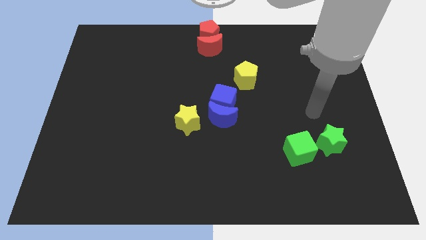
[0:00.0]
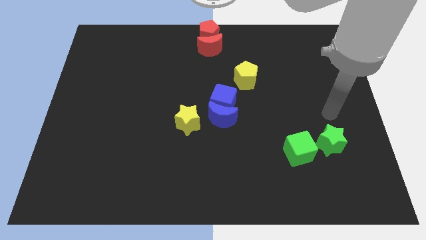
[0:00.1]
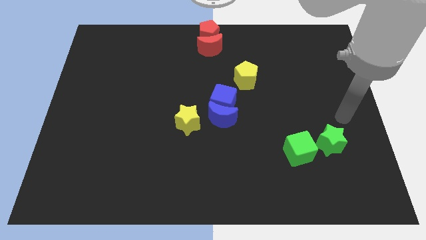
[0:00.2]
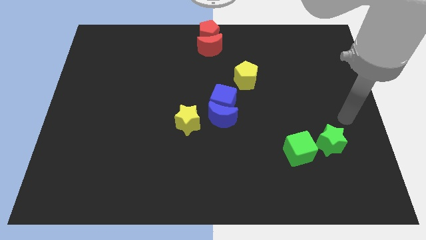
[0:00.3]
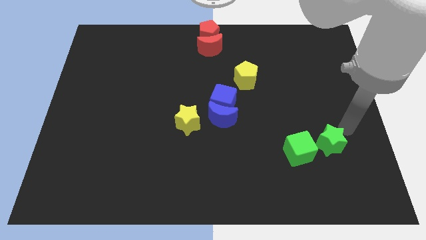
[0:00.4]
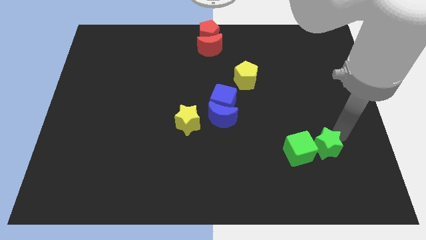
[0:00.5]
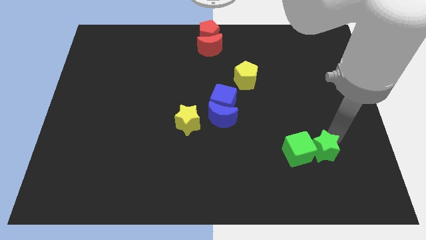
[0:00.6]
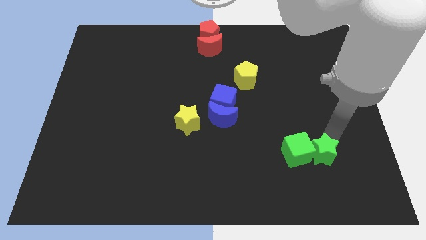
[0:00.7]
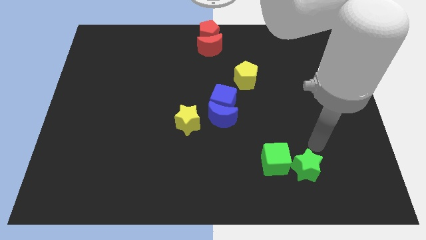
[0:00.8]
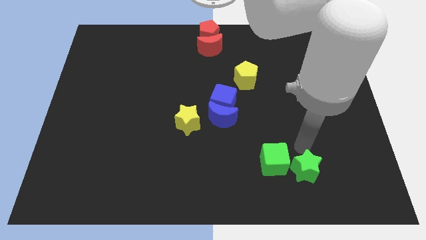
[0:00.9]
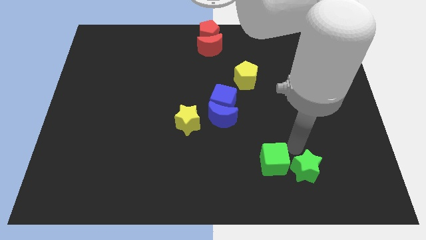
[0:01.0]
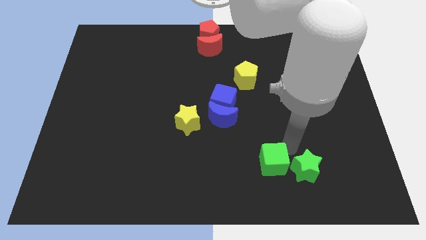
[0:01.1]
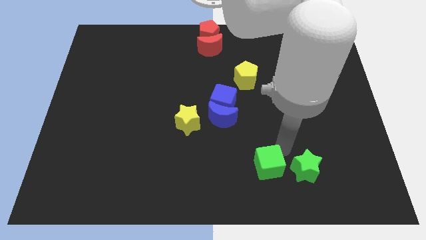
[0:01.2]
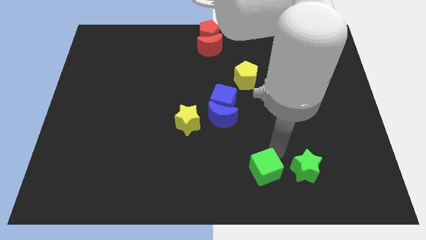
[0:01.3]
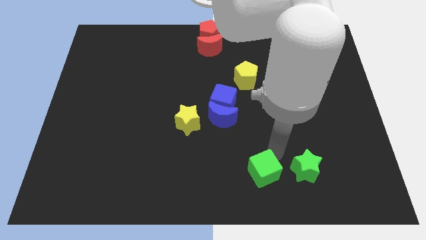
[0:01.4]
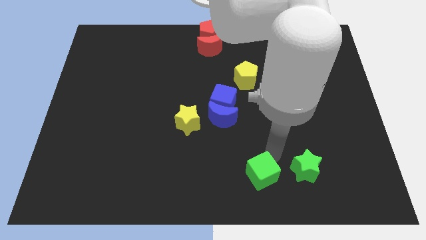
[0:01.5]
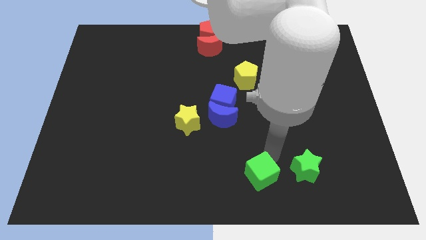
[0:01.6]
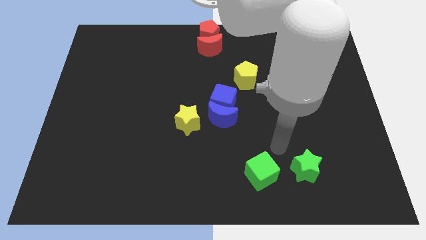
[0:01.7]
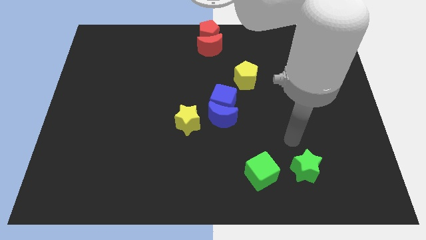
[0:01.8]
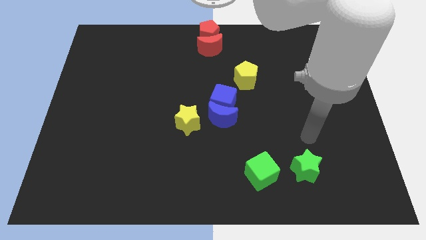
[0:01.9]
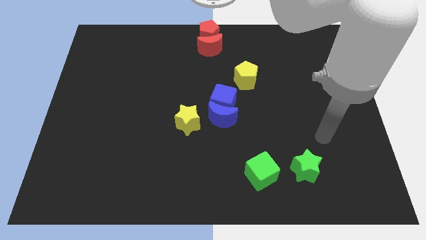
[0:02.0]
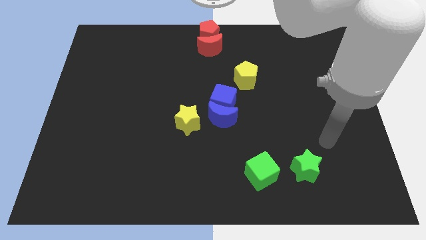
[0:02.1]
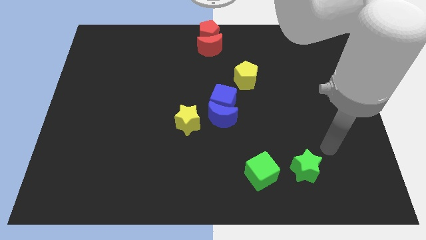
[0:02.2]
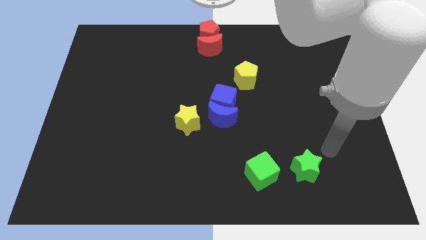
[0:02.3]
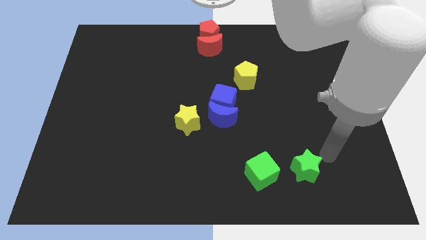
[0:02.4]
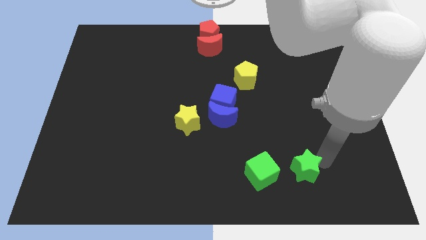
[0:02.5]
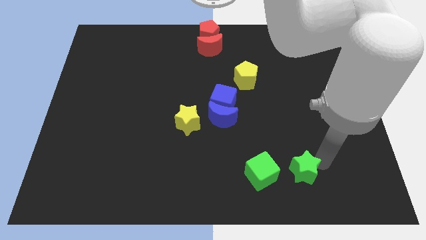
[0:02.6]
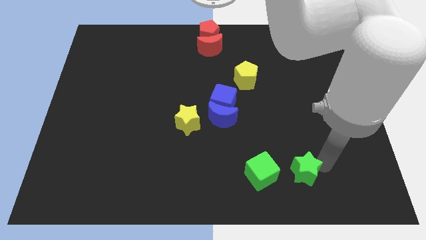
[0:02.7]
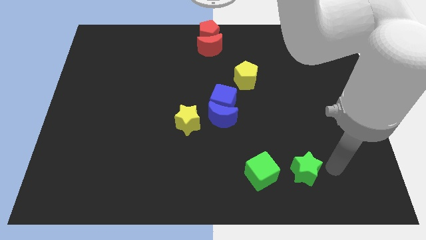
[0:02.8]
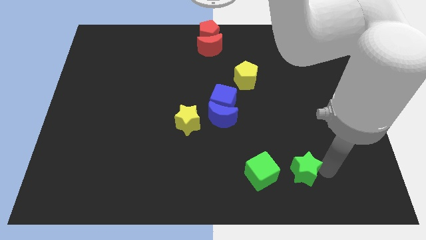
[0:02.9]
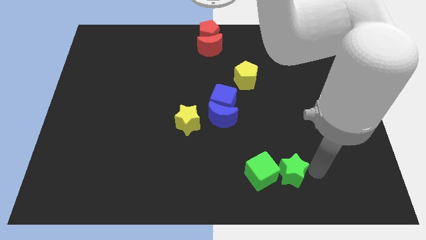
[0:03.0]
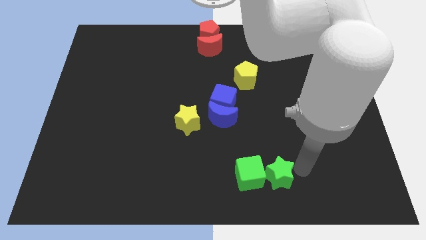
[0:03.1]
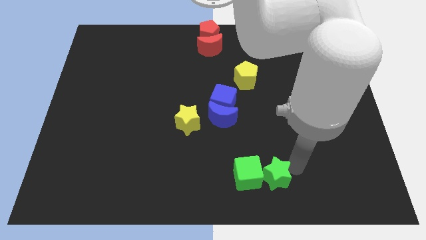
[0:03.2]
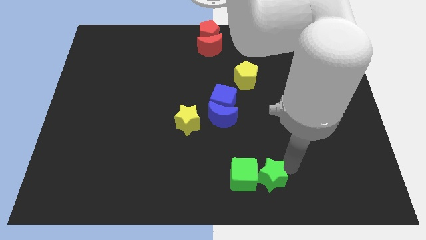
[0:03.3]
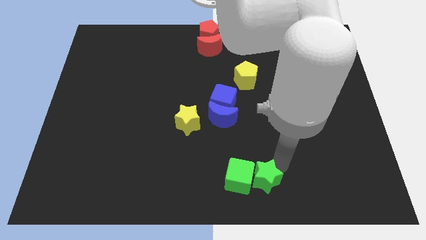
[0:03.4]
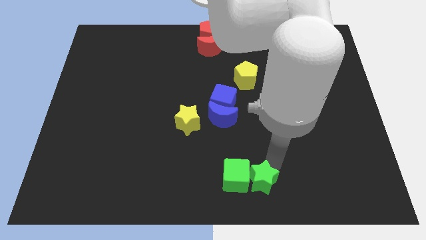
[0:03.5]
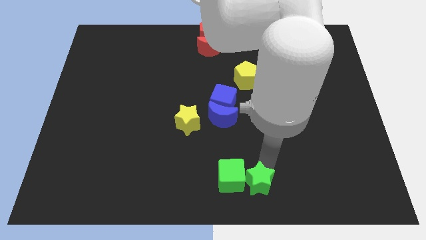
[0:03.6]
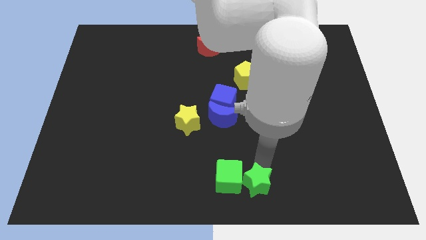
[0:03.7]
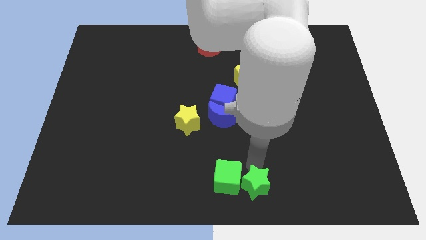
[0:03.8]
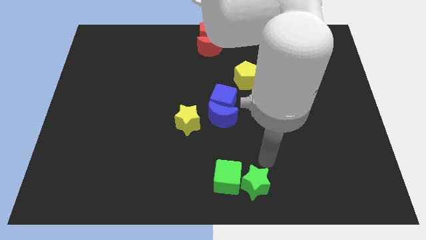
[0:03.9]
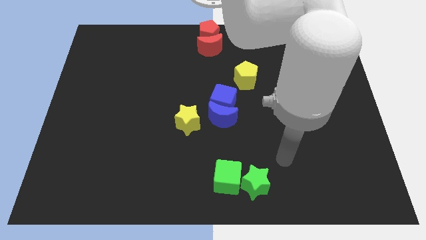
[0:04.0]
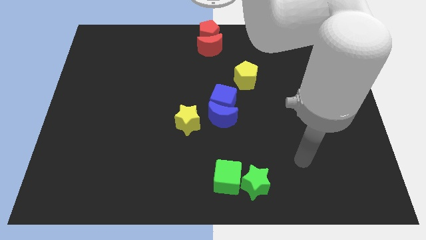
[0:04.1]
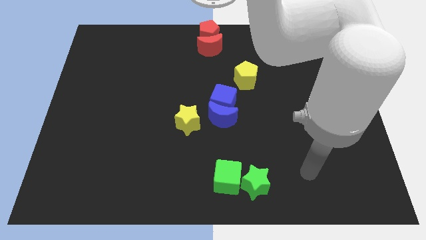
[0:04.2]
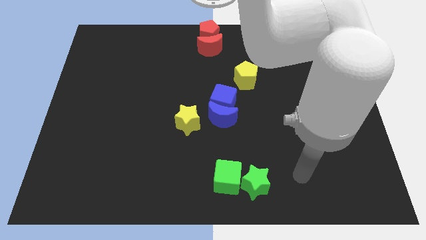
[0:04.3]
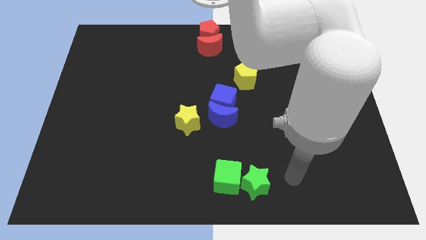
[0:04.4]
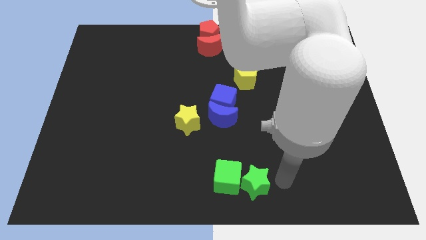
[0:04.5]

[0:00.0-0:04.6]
push the green cube and green star towards the bottom center of the board

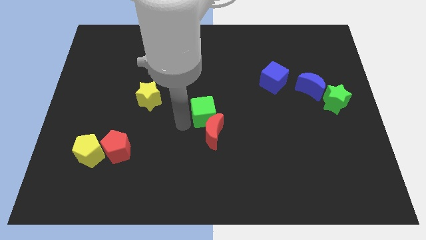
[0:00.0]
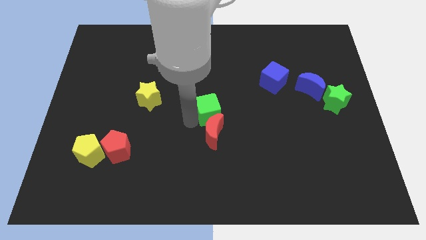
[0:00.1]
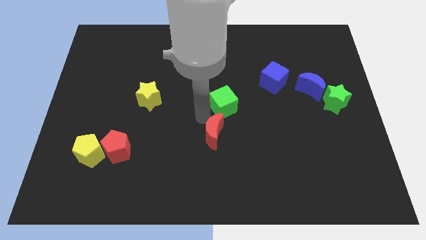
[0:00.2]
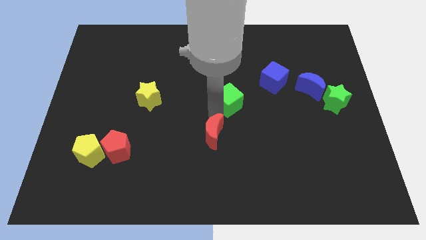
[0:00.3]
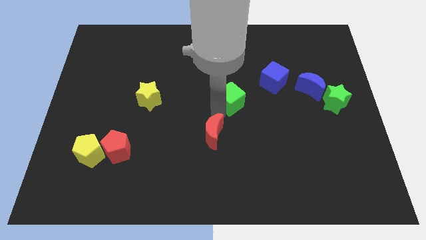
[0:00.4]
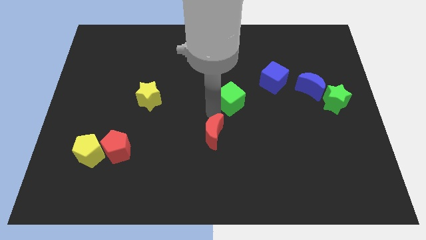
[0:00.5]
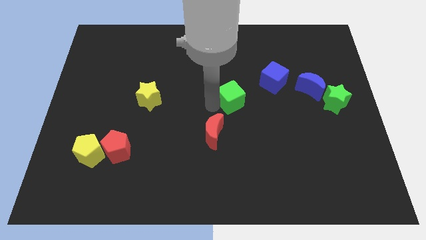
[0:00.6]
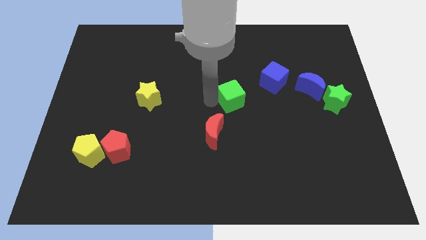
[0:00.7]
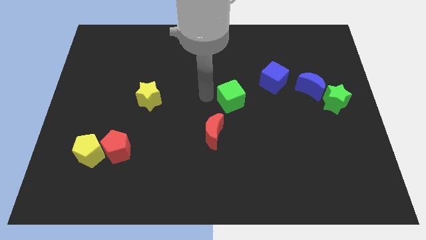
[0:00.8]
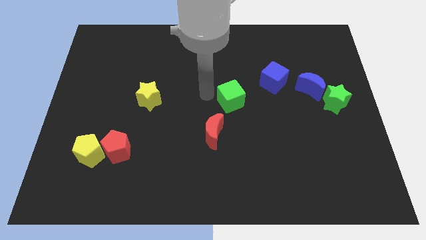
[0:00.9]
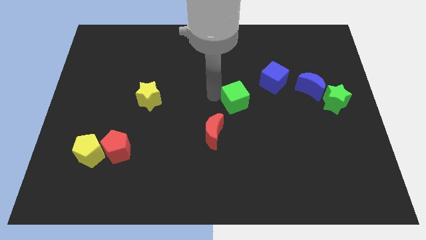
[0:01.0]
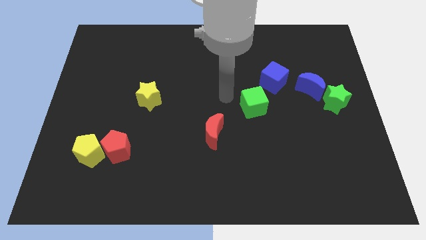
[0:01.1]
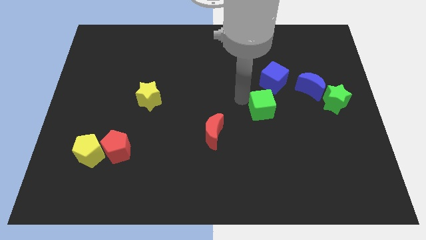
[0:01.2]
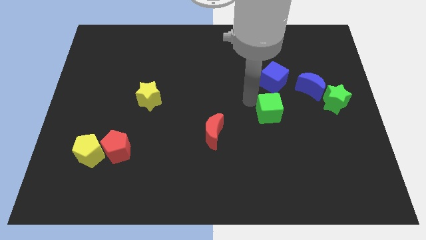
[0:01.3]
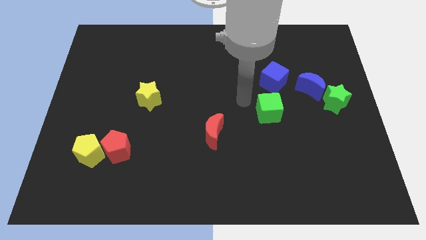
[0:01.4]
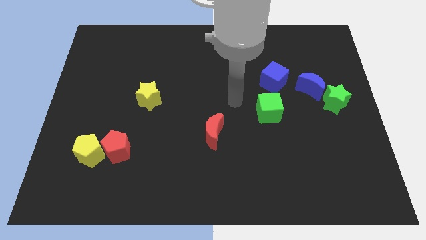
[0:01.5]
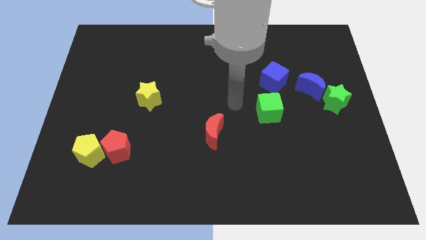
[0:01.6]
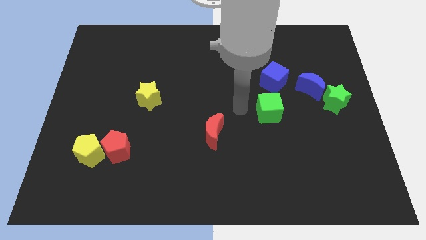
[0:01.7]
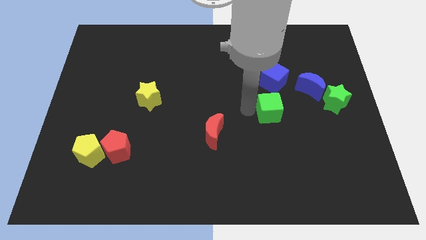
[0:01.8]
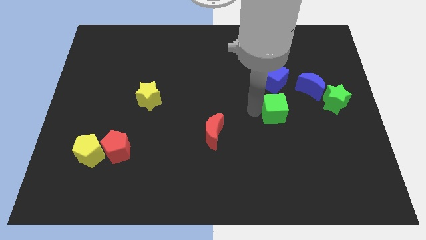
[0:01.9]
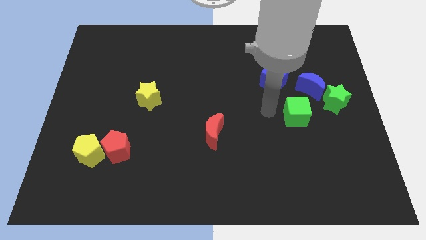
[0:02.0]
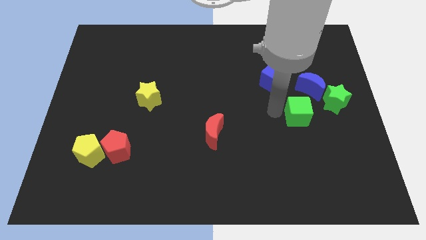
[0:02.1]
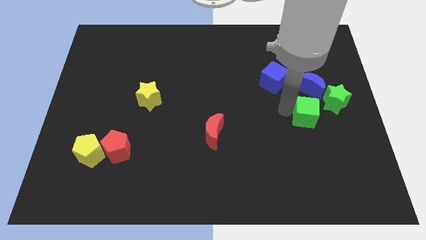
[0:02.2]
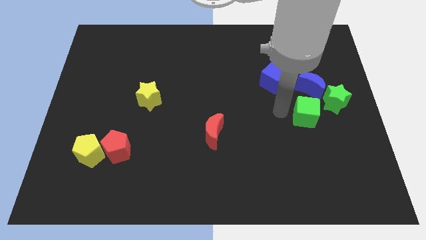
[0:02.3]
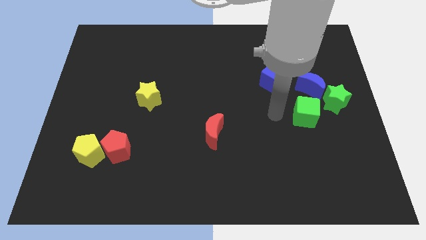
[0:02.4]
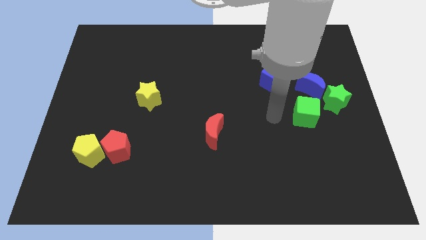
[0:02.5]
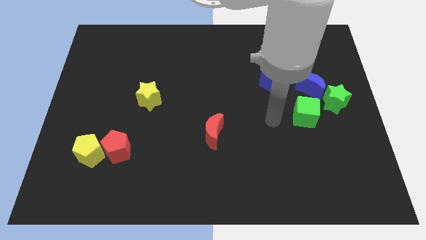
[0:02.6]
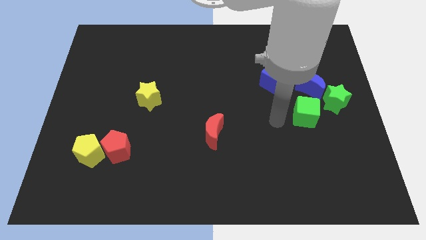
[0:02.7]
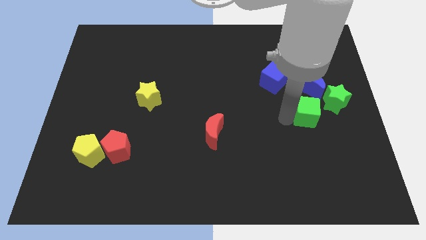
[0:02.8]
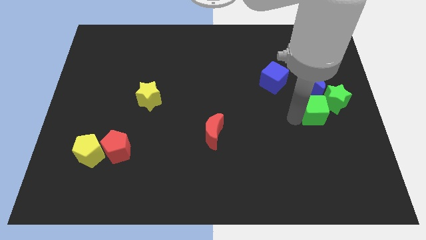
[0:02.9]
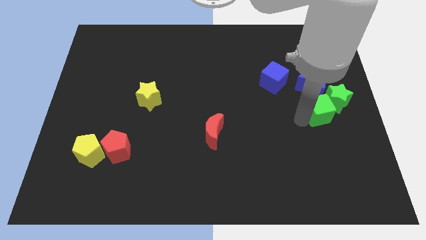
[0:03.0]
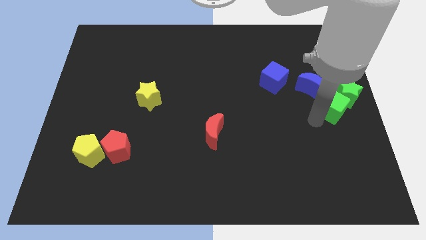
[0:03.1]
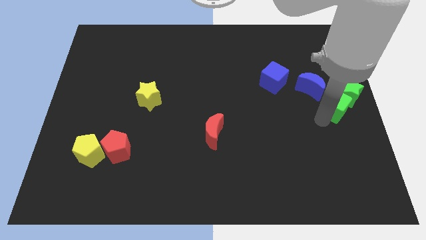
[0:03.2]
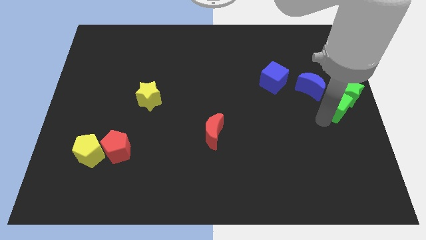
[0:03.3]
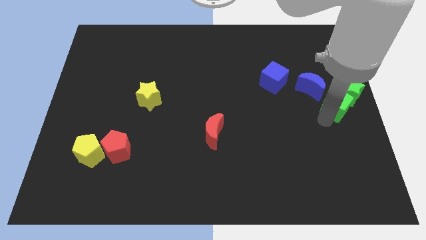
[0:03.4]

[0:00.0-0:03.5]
move the green cube down to the green star

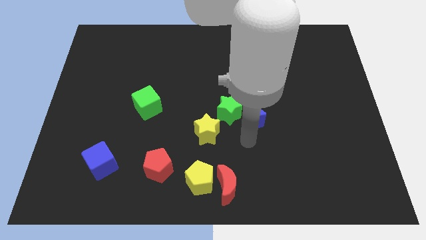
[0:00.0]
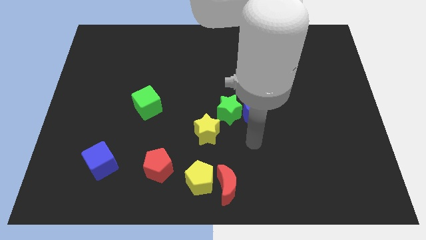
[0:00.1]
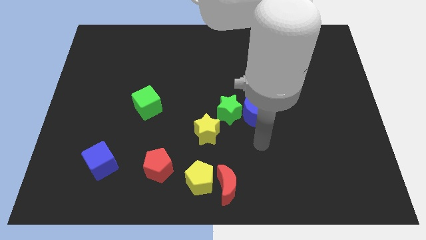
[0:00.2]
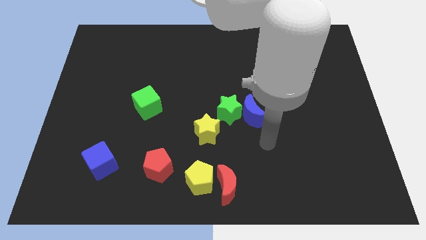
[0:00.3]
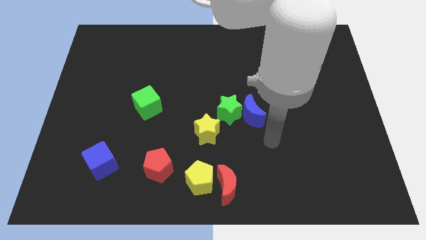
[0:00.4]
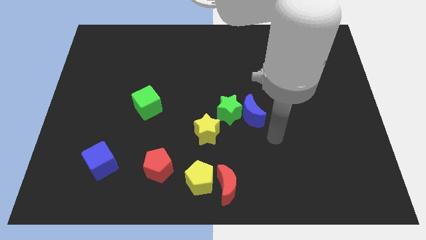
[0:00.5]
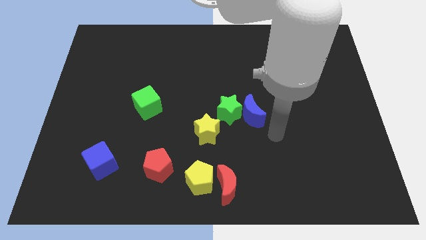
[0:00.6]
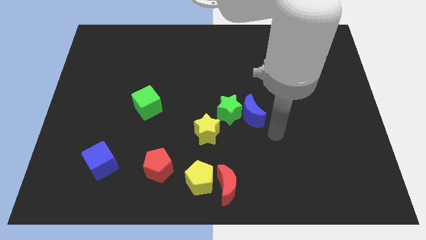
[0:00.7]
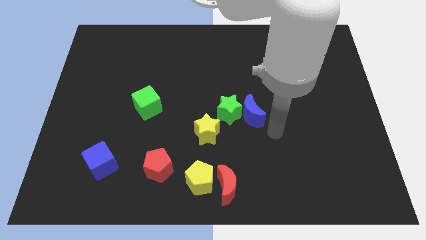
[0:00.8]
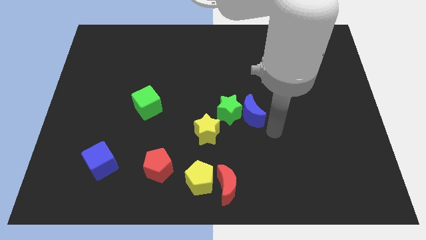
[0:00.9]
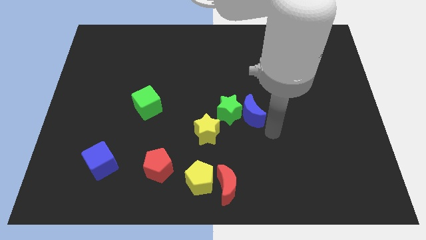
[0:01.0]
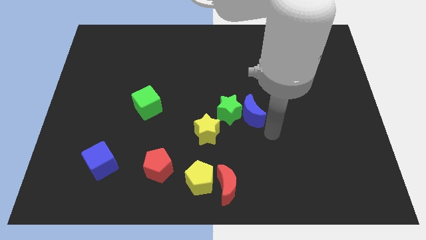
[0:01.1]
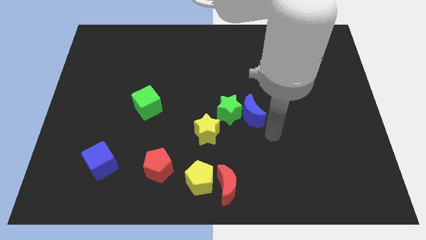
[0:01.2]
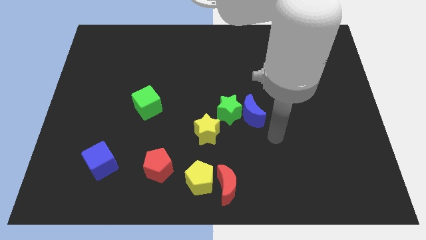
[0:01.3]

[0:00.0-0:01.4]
move your arm to the bottom of blue crescent
